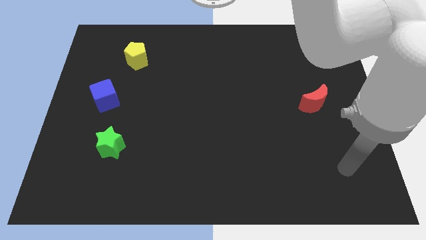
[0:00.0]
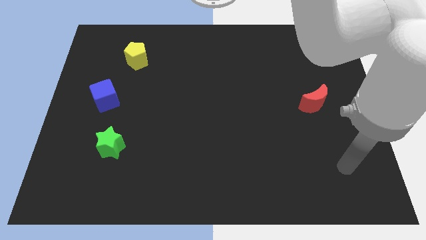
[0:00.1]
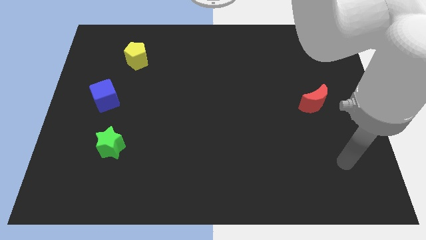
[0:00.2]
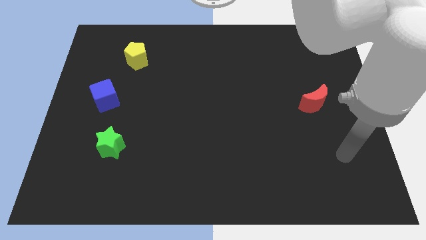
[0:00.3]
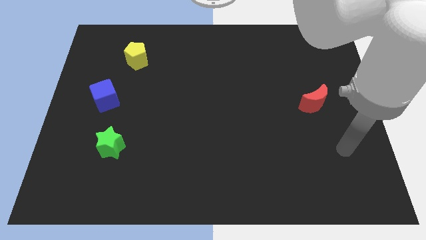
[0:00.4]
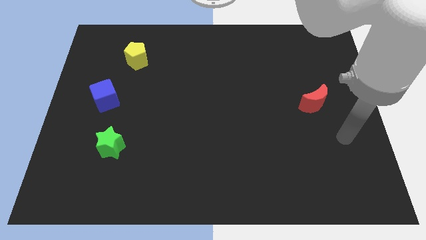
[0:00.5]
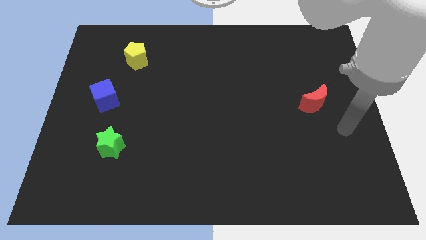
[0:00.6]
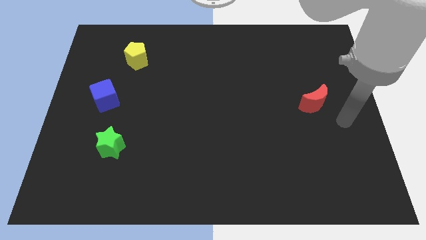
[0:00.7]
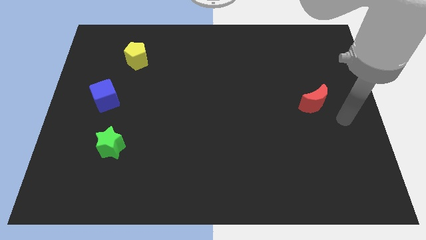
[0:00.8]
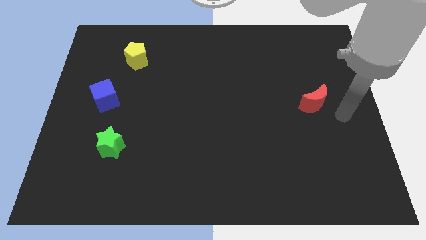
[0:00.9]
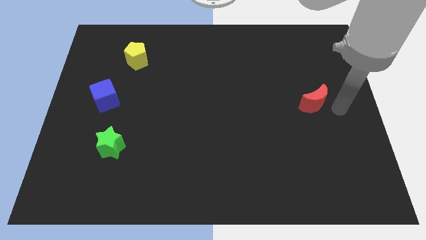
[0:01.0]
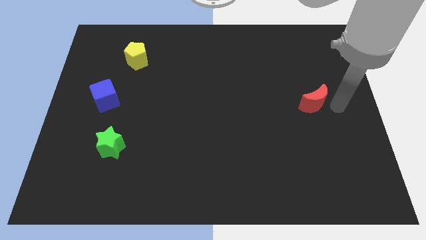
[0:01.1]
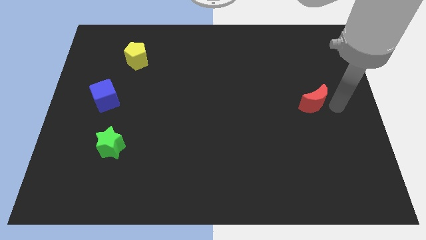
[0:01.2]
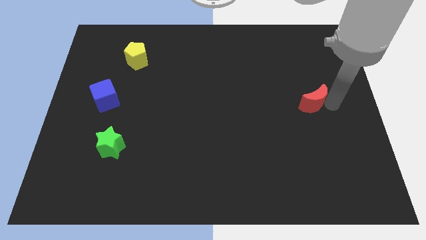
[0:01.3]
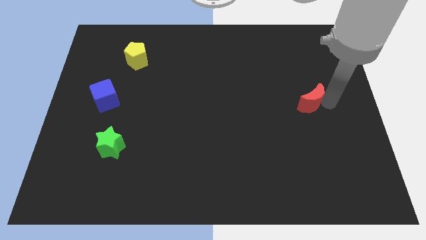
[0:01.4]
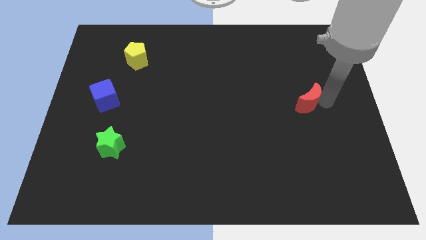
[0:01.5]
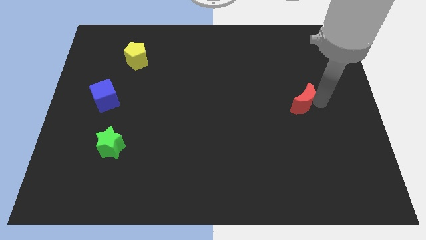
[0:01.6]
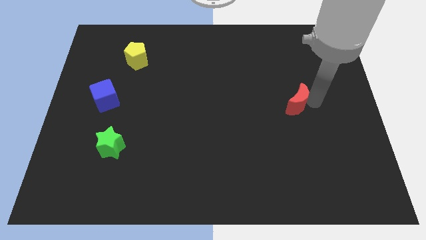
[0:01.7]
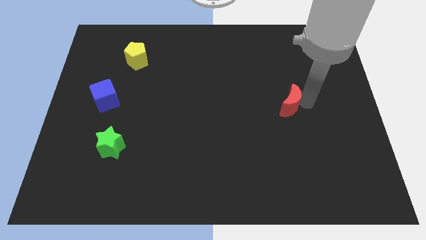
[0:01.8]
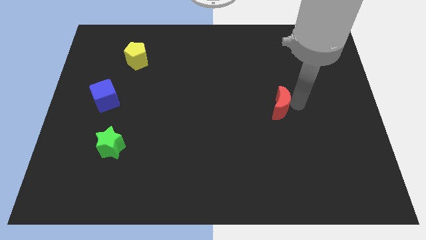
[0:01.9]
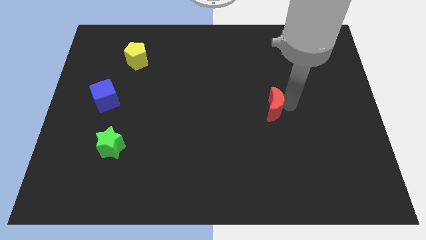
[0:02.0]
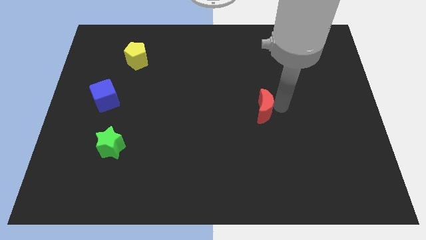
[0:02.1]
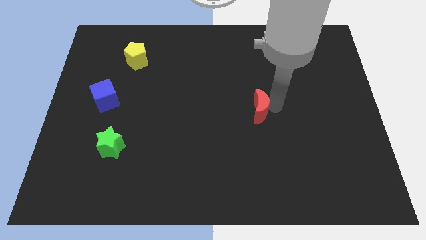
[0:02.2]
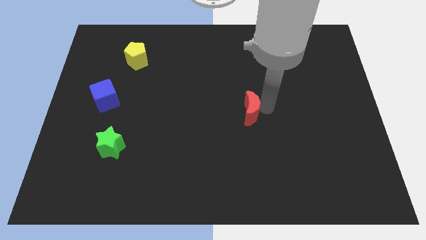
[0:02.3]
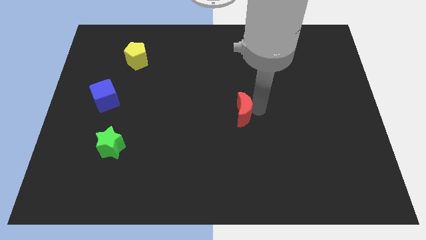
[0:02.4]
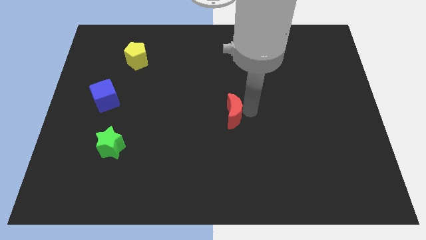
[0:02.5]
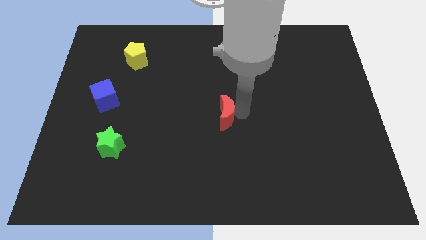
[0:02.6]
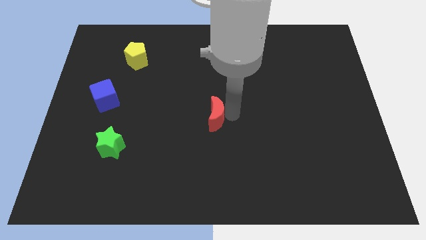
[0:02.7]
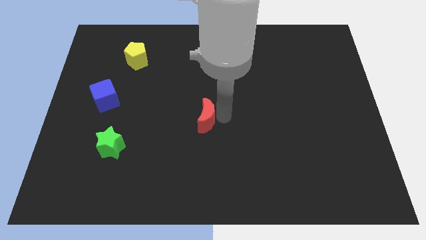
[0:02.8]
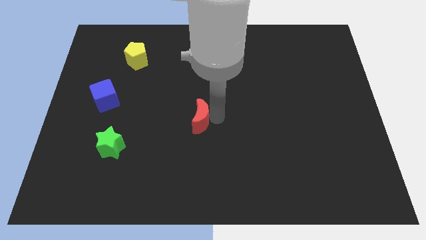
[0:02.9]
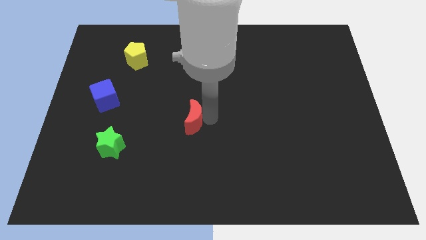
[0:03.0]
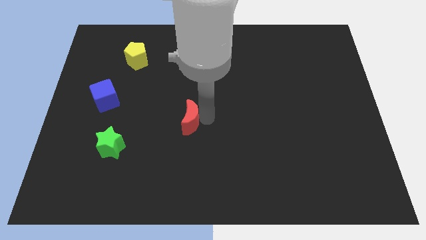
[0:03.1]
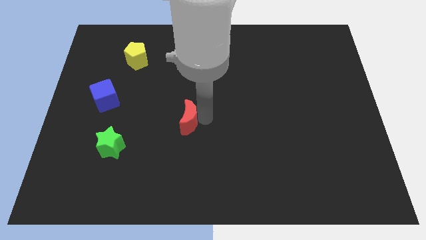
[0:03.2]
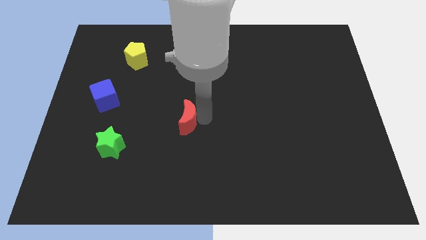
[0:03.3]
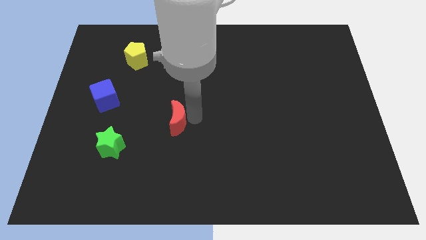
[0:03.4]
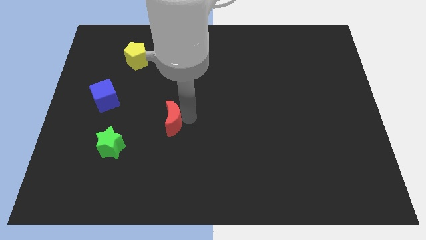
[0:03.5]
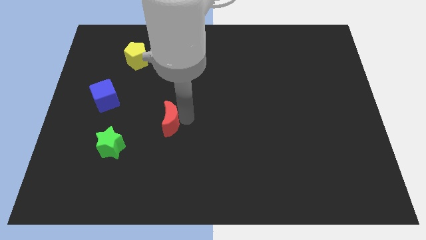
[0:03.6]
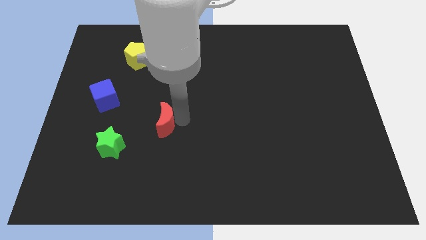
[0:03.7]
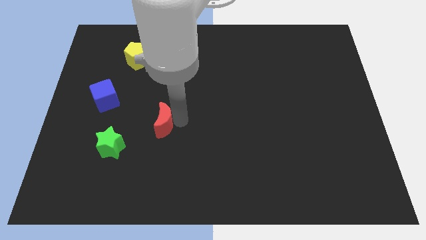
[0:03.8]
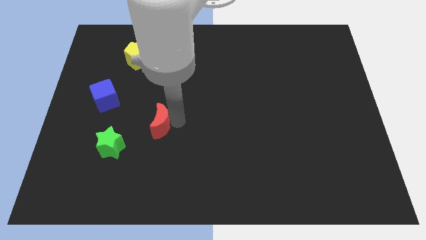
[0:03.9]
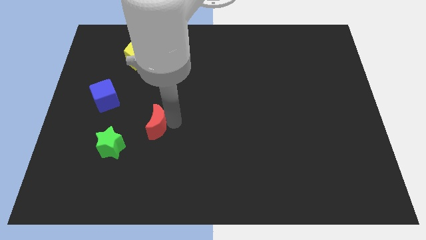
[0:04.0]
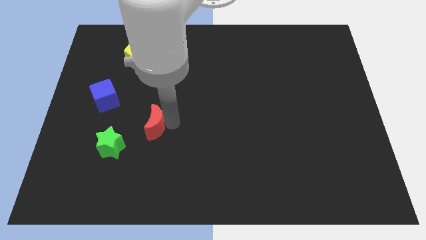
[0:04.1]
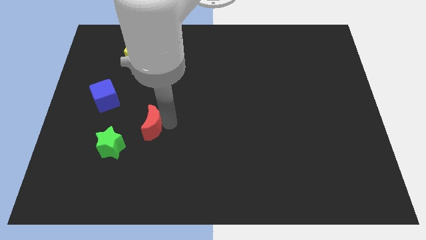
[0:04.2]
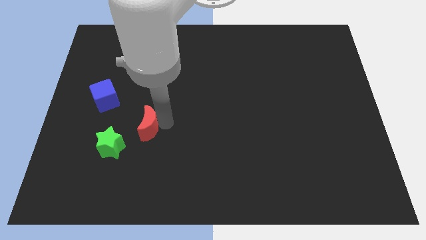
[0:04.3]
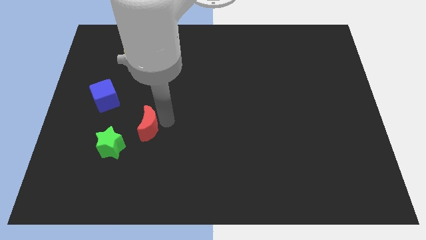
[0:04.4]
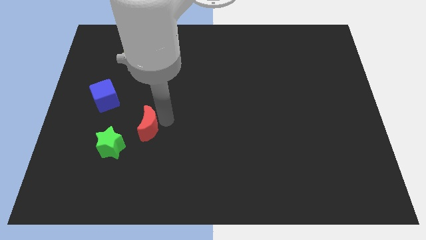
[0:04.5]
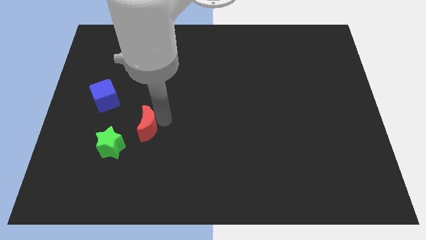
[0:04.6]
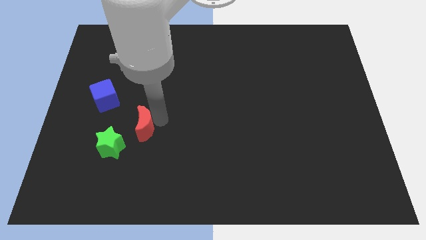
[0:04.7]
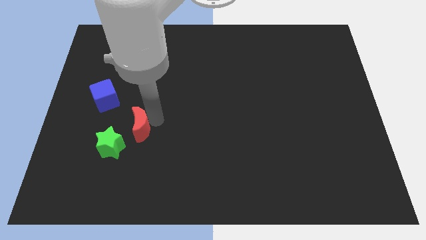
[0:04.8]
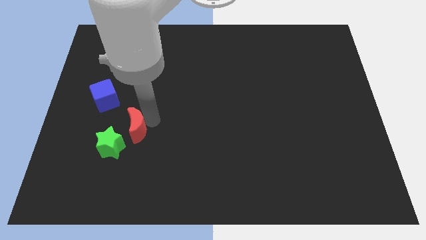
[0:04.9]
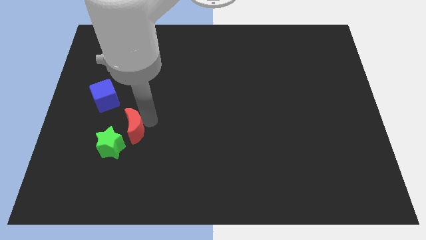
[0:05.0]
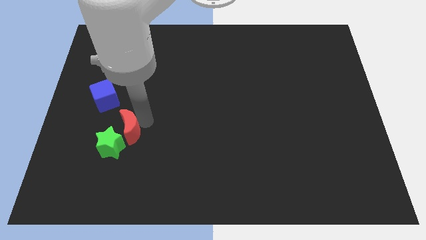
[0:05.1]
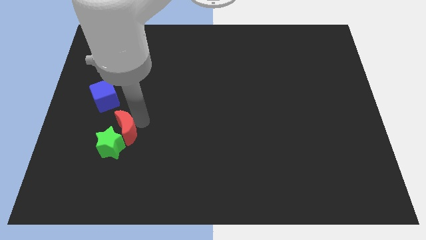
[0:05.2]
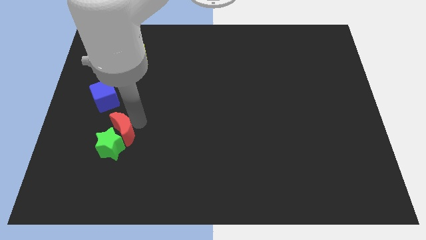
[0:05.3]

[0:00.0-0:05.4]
push the red moon next to the green block

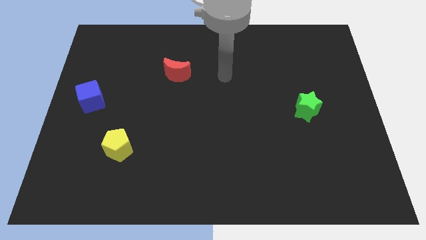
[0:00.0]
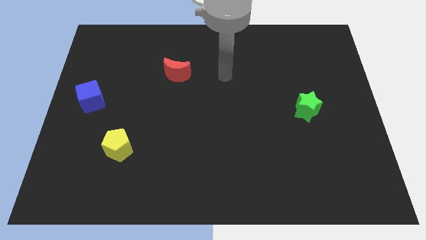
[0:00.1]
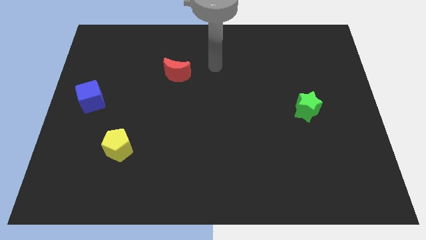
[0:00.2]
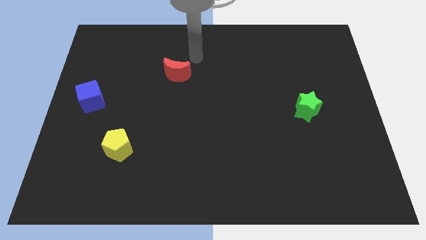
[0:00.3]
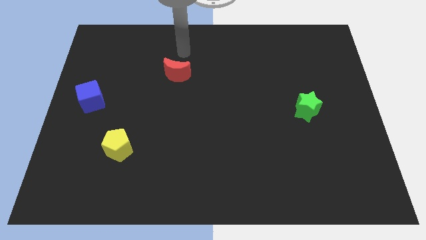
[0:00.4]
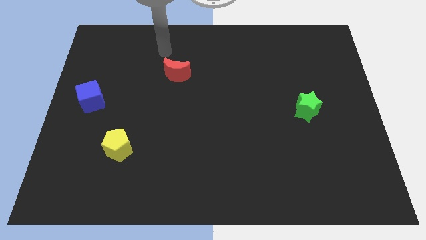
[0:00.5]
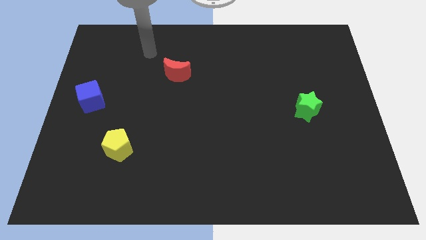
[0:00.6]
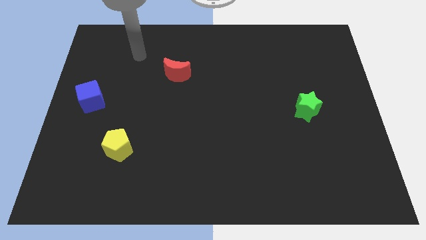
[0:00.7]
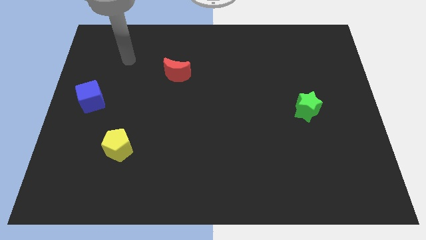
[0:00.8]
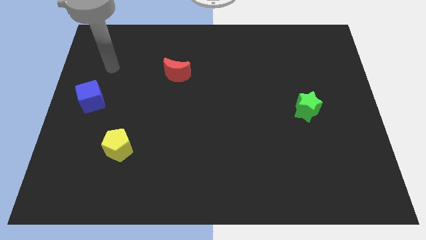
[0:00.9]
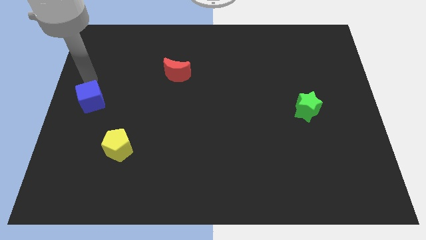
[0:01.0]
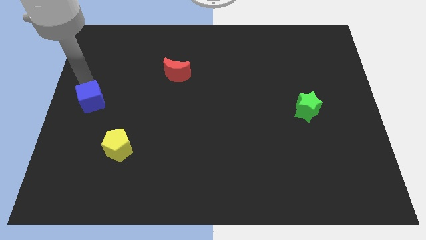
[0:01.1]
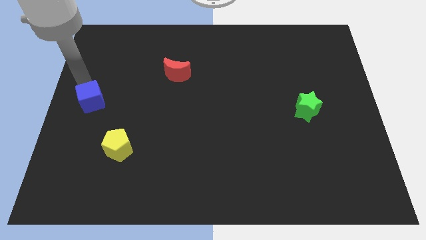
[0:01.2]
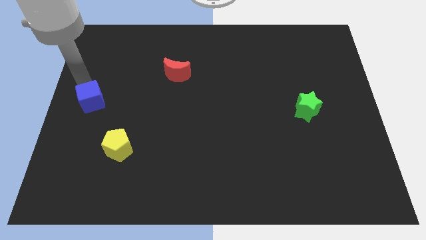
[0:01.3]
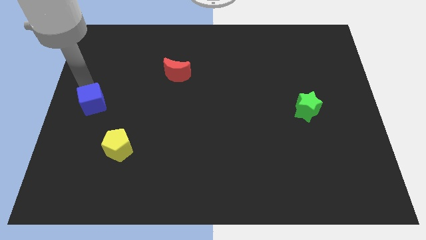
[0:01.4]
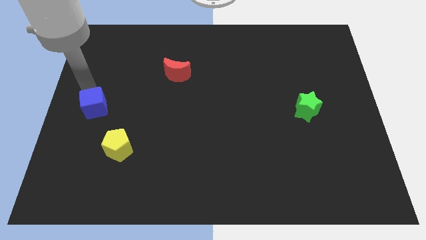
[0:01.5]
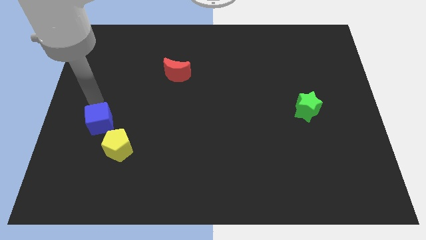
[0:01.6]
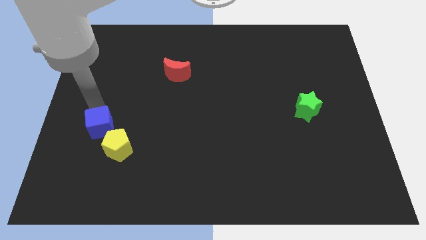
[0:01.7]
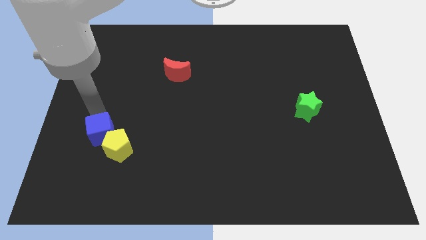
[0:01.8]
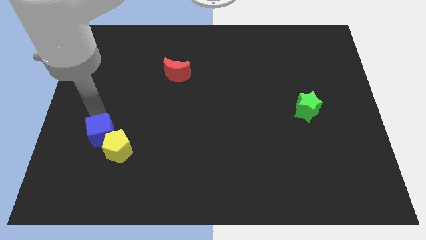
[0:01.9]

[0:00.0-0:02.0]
push the cube close to the yellow pentagon

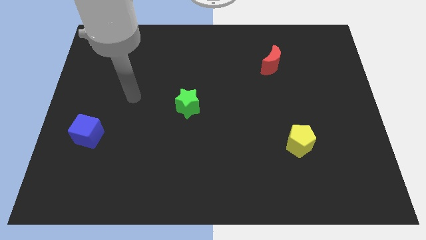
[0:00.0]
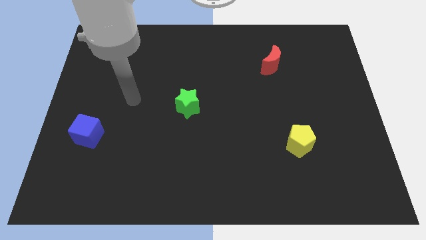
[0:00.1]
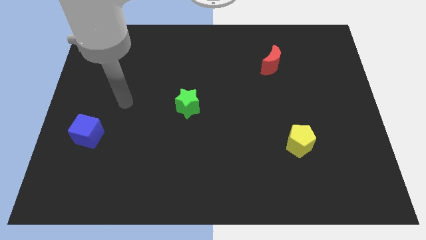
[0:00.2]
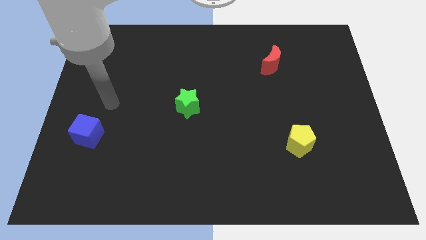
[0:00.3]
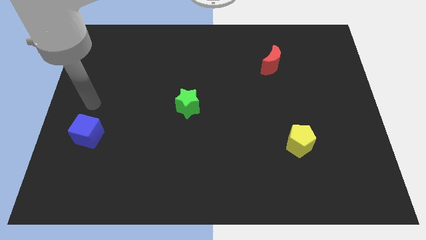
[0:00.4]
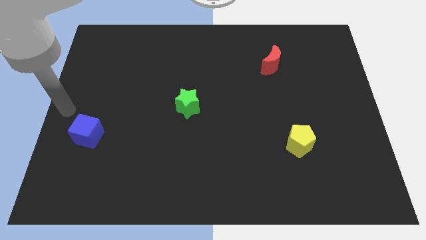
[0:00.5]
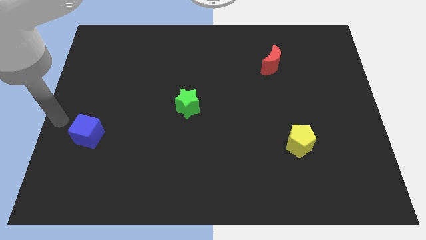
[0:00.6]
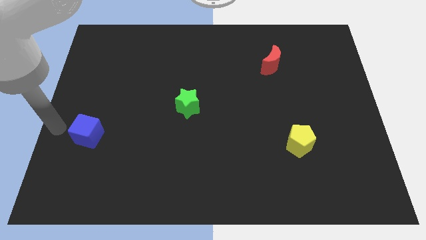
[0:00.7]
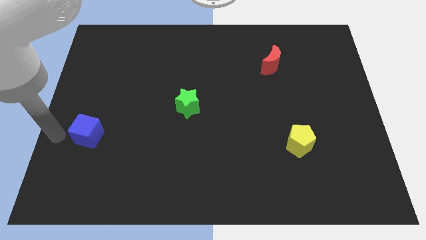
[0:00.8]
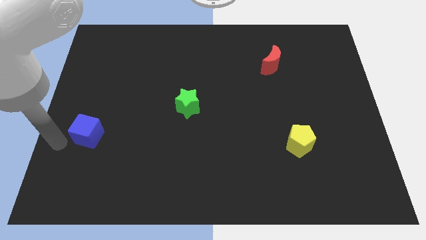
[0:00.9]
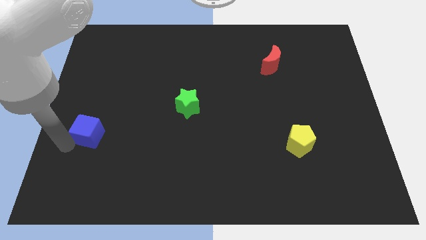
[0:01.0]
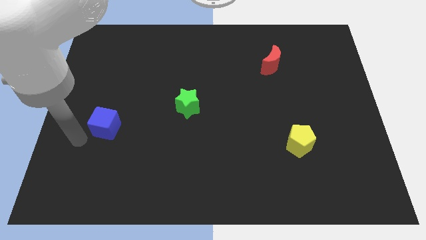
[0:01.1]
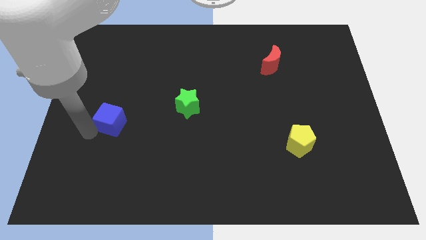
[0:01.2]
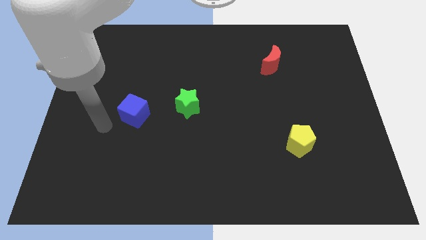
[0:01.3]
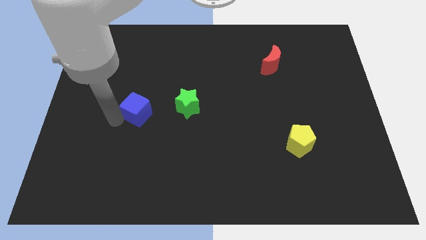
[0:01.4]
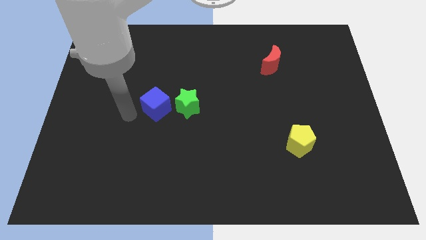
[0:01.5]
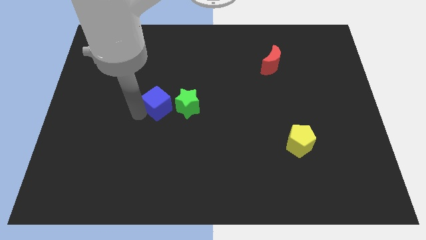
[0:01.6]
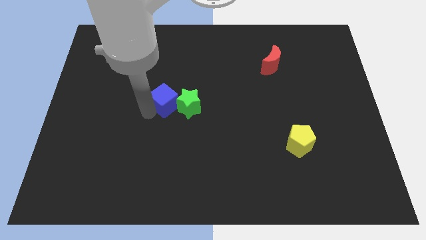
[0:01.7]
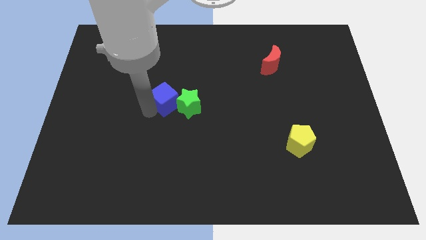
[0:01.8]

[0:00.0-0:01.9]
slide the blue cube to the green block
